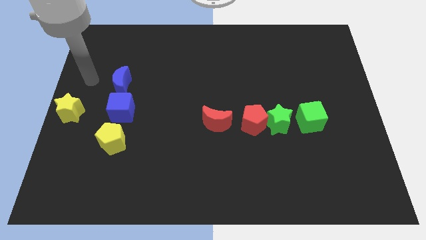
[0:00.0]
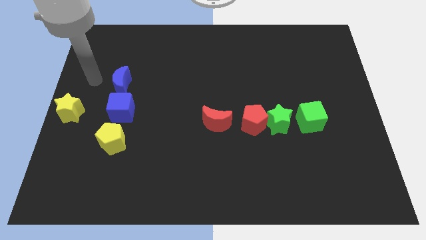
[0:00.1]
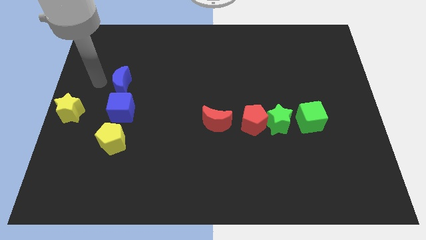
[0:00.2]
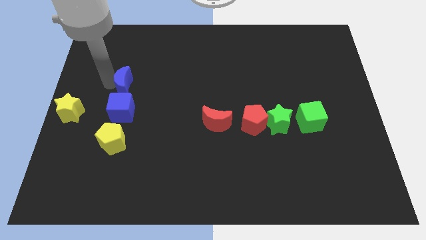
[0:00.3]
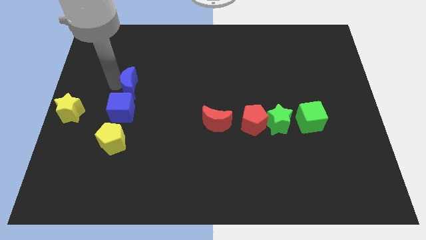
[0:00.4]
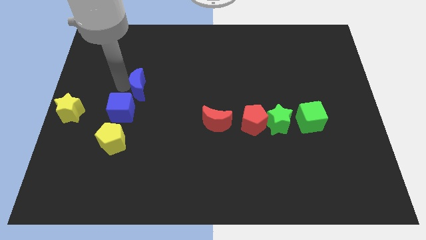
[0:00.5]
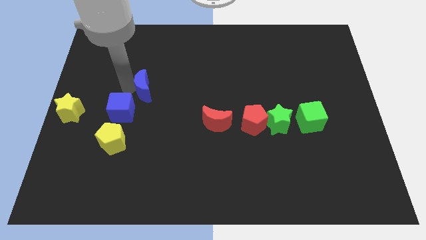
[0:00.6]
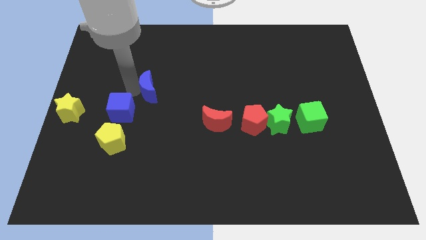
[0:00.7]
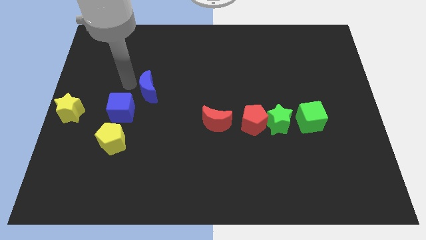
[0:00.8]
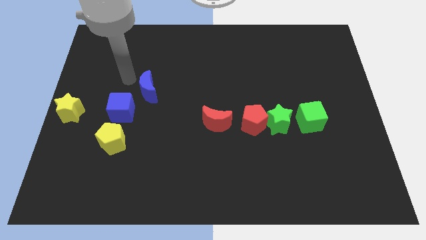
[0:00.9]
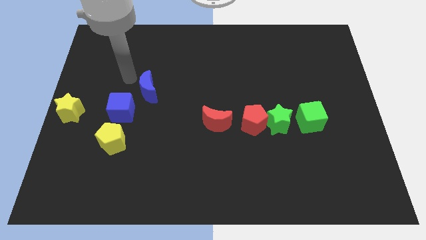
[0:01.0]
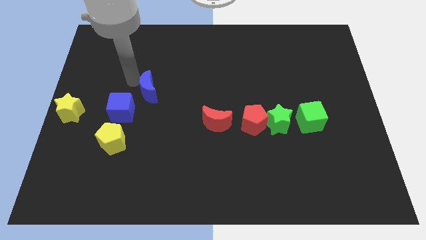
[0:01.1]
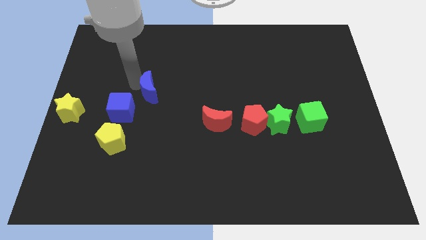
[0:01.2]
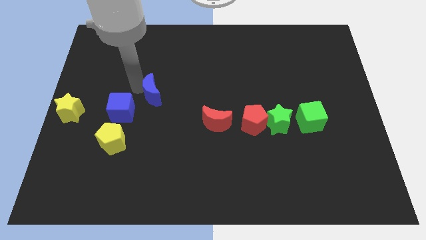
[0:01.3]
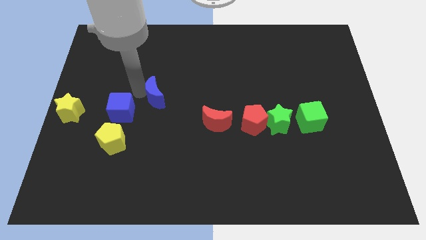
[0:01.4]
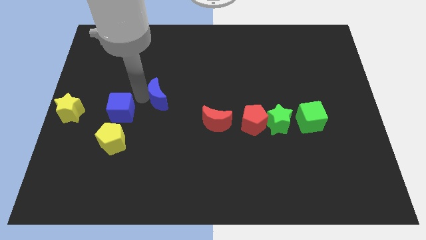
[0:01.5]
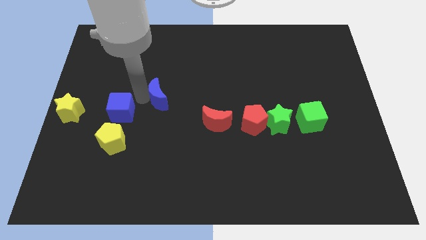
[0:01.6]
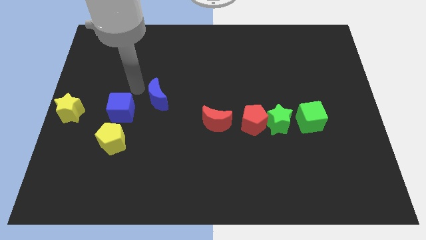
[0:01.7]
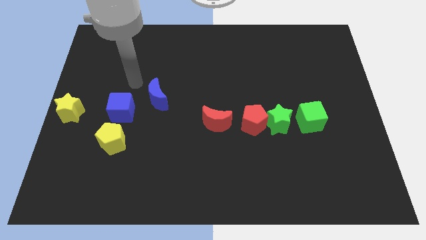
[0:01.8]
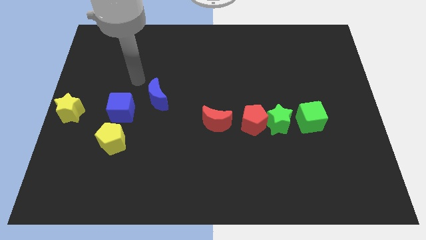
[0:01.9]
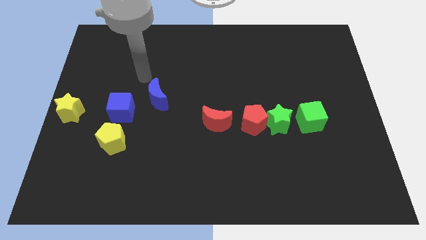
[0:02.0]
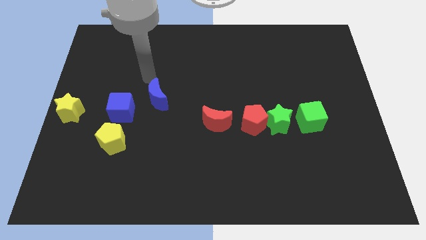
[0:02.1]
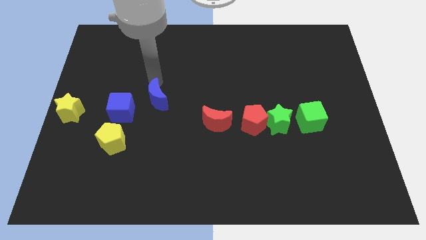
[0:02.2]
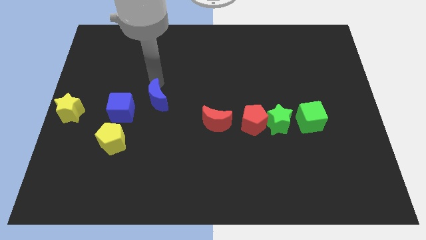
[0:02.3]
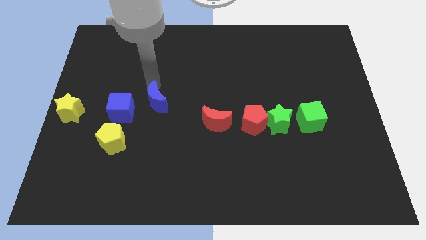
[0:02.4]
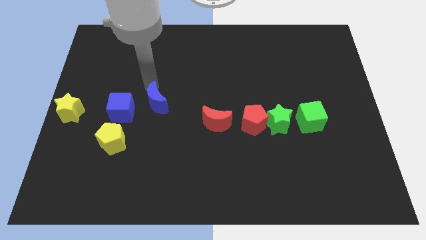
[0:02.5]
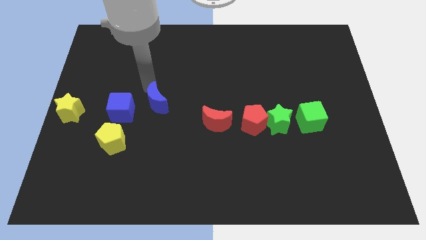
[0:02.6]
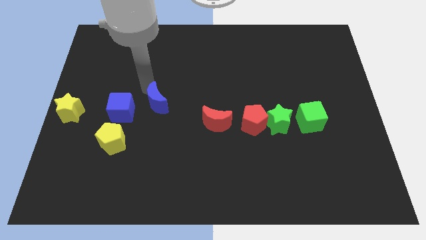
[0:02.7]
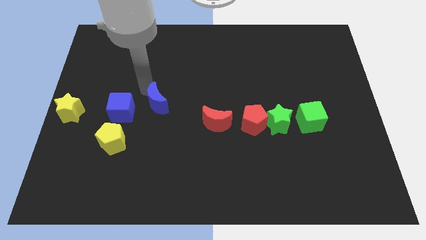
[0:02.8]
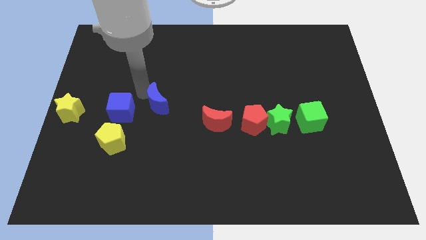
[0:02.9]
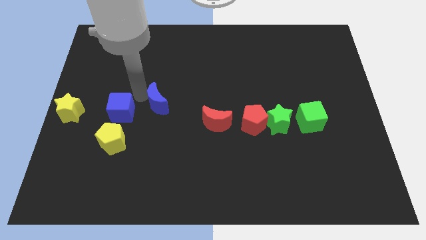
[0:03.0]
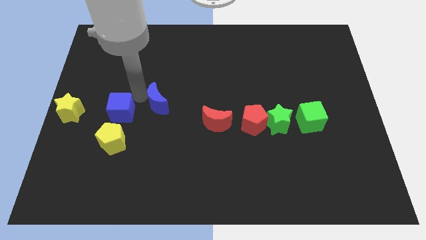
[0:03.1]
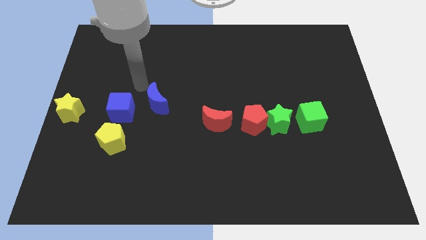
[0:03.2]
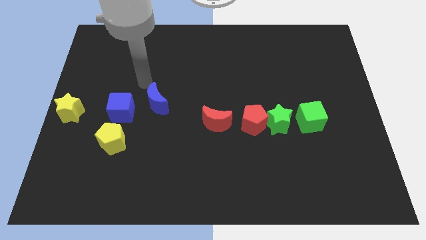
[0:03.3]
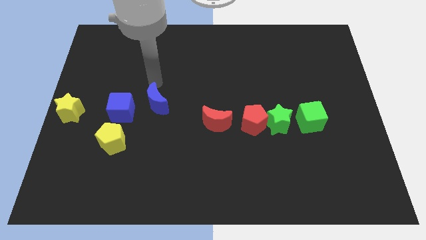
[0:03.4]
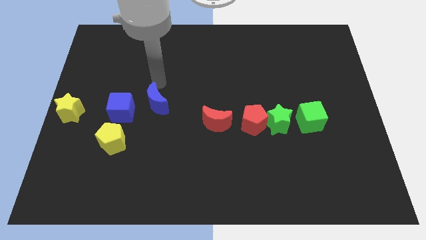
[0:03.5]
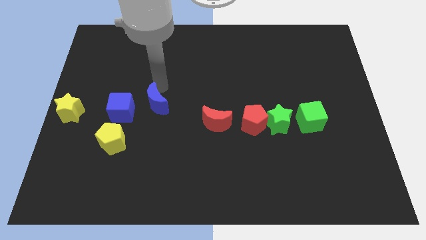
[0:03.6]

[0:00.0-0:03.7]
move blue moon in between red moon and blue cube

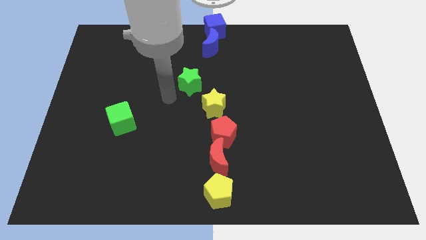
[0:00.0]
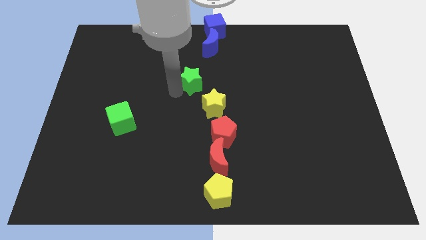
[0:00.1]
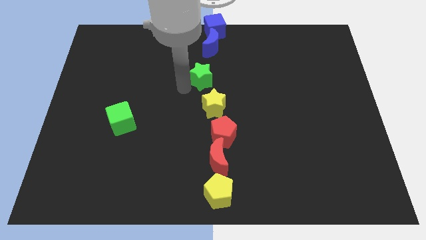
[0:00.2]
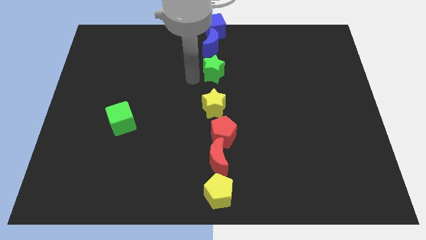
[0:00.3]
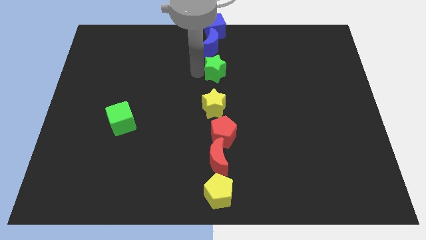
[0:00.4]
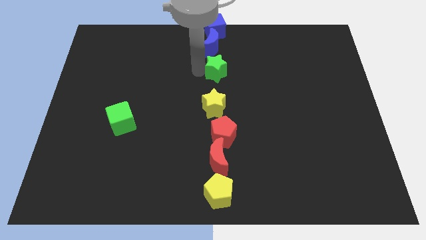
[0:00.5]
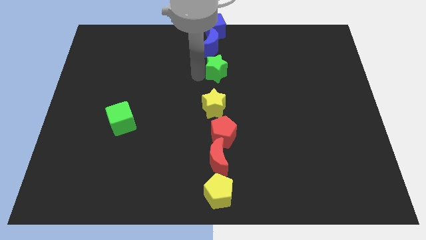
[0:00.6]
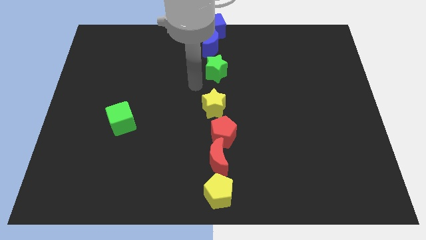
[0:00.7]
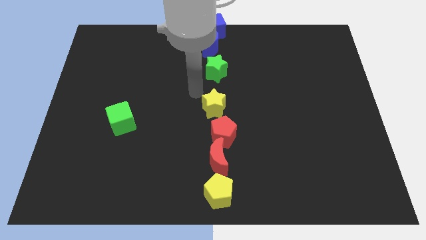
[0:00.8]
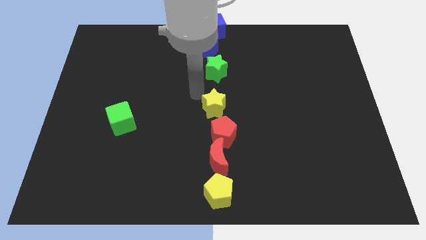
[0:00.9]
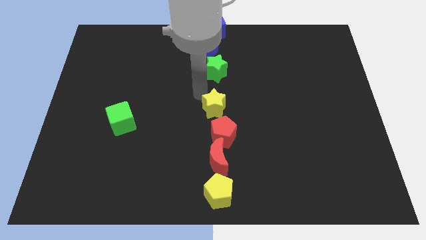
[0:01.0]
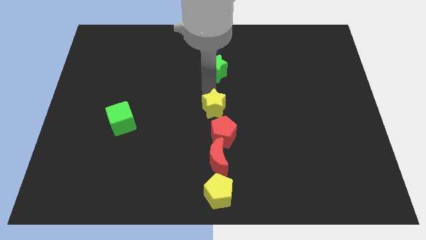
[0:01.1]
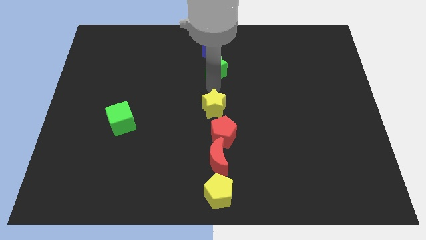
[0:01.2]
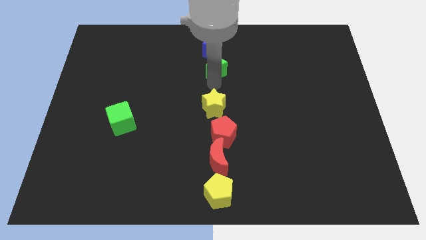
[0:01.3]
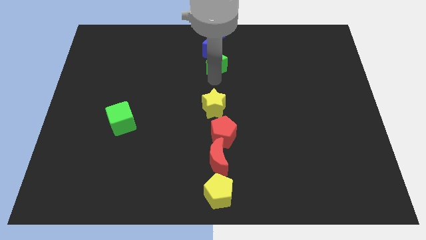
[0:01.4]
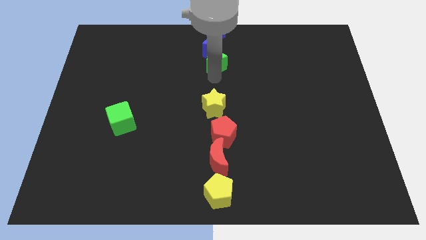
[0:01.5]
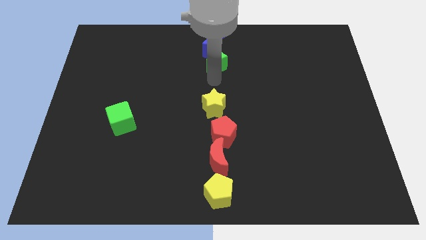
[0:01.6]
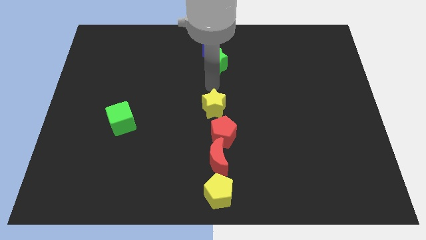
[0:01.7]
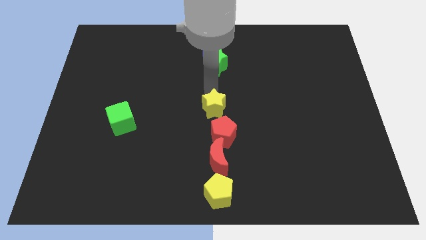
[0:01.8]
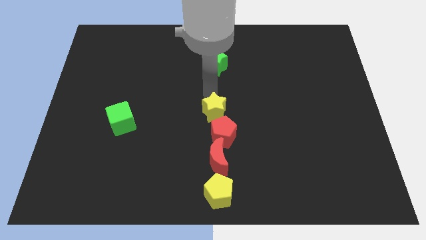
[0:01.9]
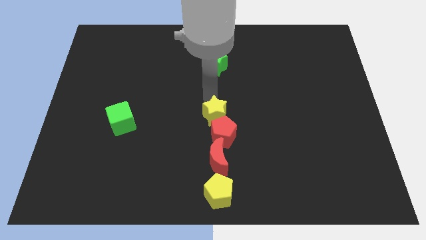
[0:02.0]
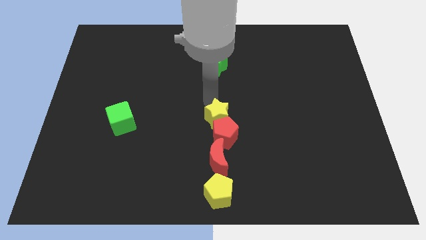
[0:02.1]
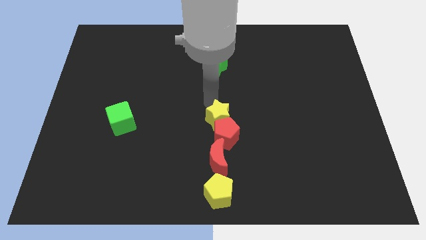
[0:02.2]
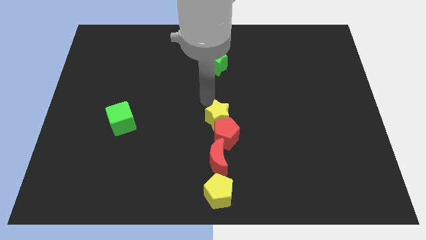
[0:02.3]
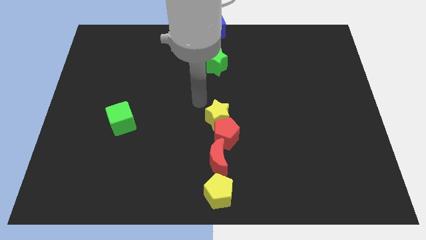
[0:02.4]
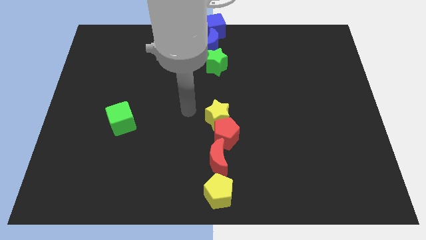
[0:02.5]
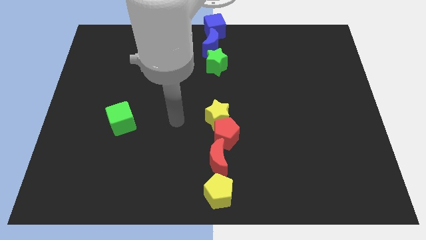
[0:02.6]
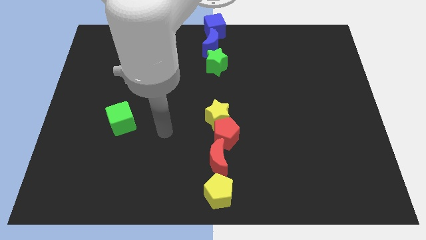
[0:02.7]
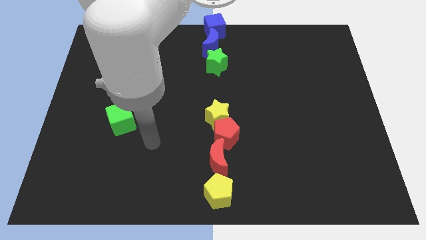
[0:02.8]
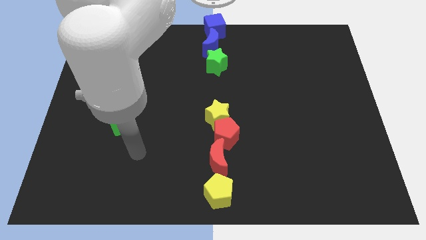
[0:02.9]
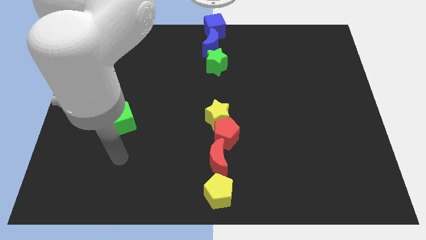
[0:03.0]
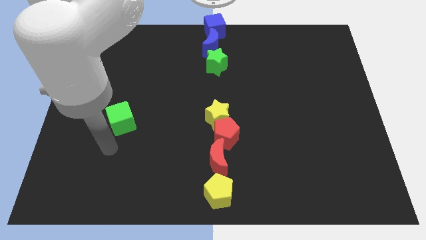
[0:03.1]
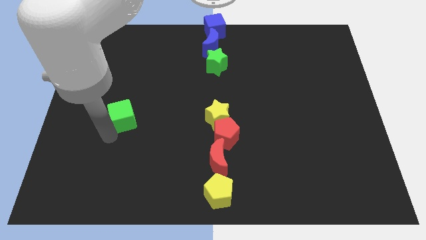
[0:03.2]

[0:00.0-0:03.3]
place green star bottom of the blue moon

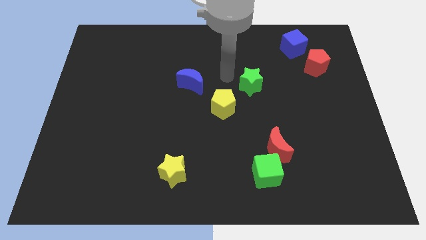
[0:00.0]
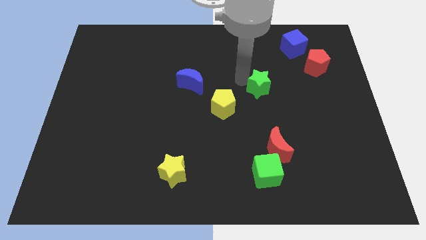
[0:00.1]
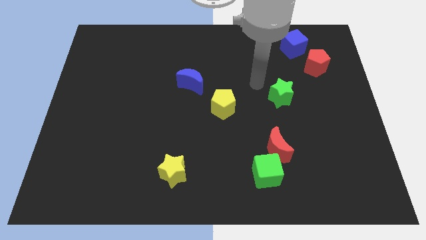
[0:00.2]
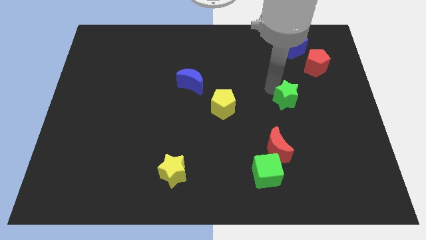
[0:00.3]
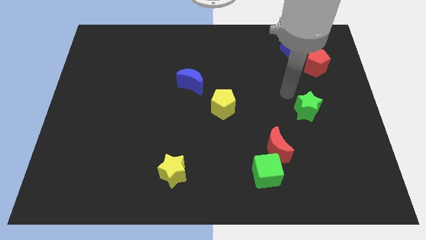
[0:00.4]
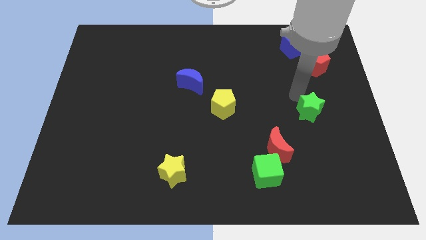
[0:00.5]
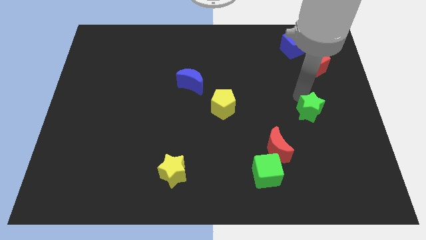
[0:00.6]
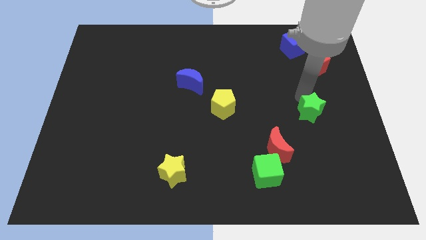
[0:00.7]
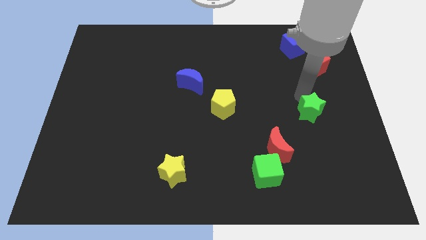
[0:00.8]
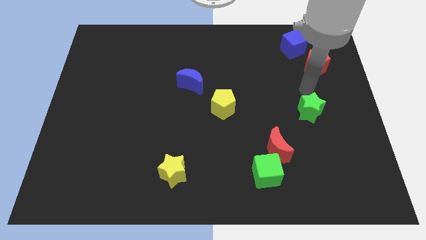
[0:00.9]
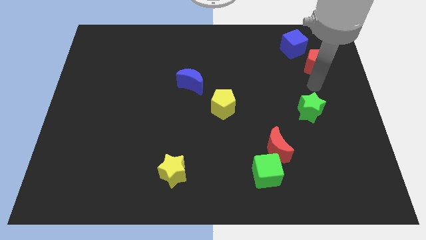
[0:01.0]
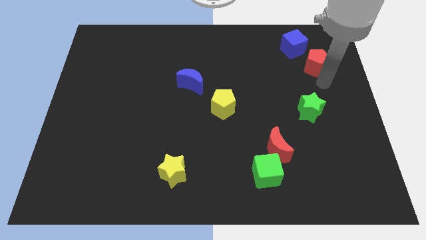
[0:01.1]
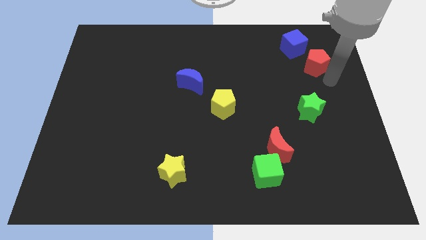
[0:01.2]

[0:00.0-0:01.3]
move the green star in between the red crescent red pentagon

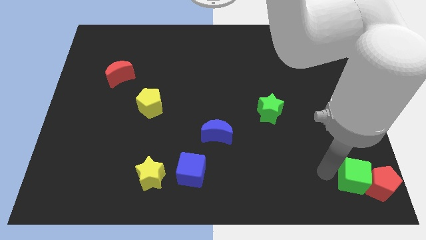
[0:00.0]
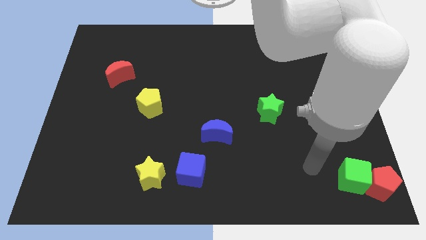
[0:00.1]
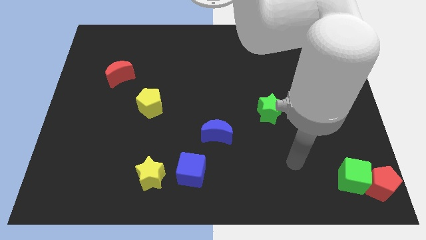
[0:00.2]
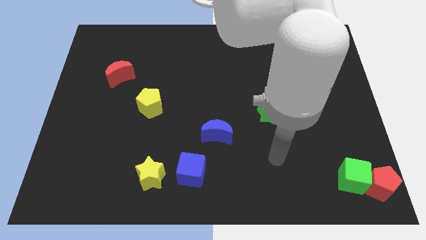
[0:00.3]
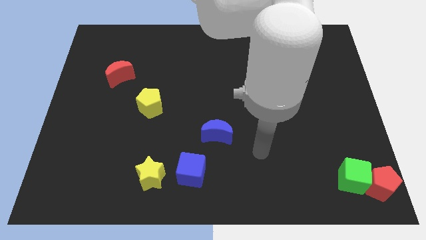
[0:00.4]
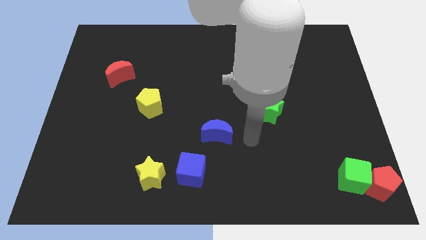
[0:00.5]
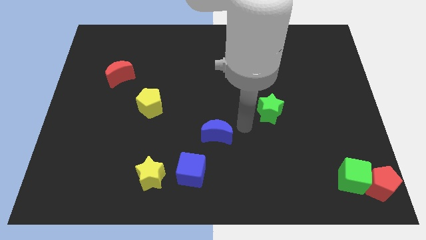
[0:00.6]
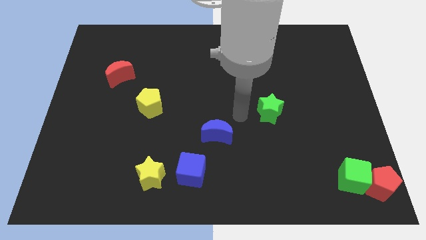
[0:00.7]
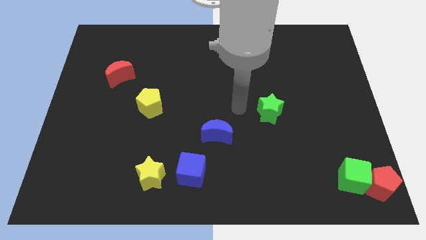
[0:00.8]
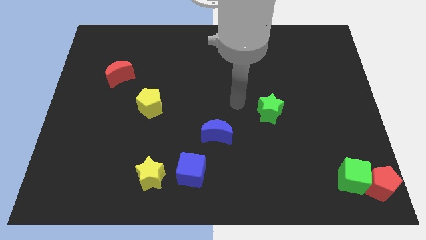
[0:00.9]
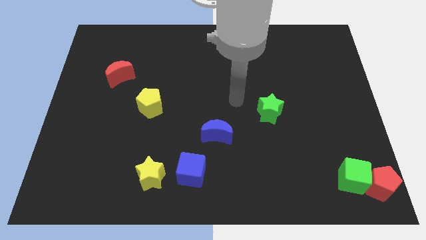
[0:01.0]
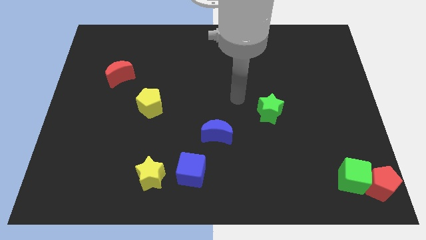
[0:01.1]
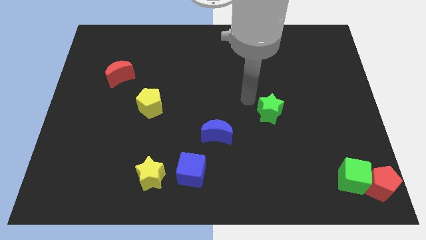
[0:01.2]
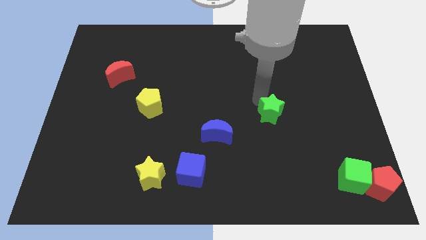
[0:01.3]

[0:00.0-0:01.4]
move your arm towards the green star
